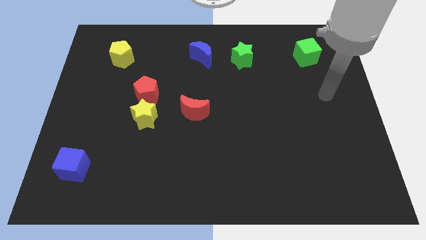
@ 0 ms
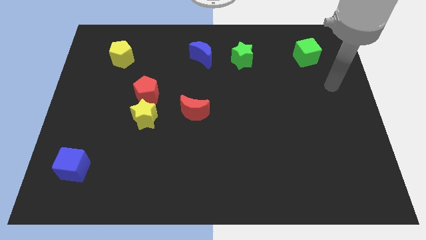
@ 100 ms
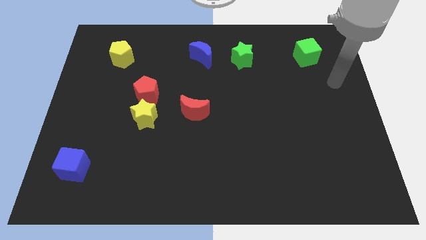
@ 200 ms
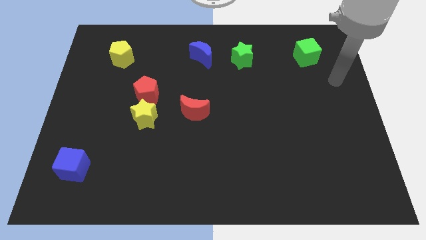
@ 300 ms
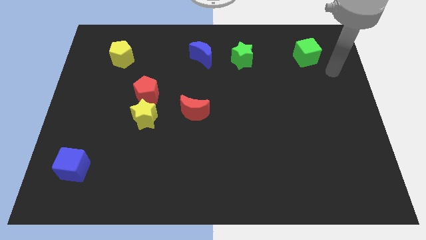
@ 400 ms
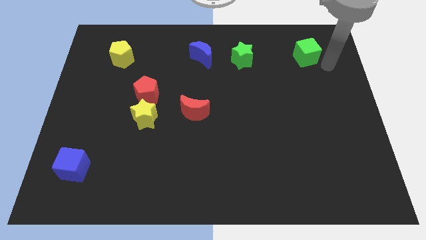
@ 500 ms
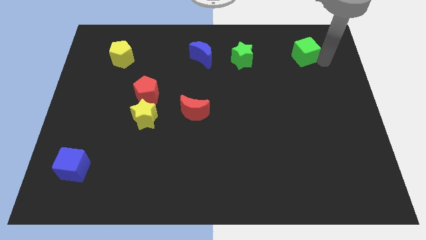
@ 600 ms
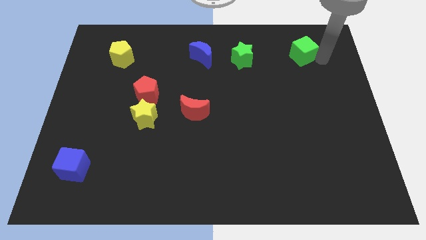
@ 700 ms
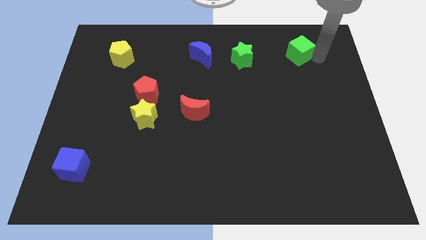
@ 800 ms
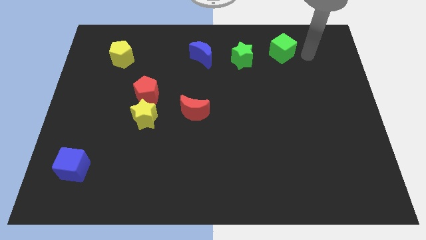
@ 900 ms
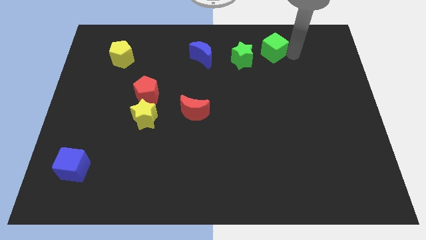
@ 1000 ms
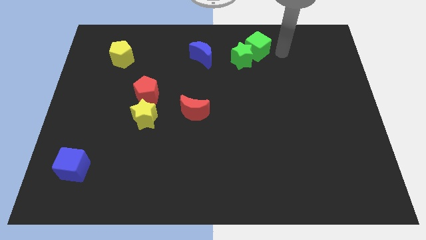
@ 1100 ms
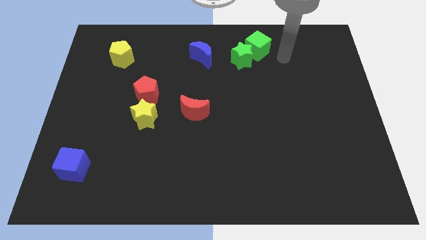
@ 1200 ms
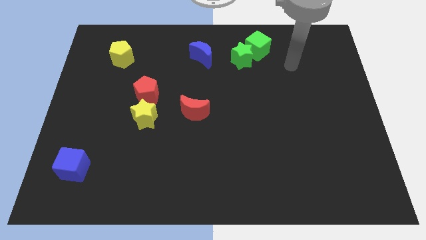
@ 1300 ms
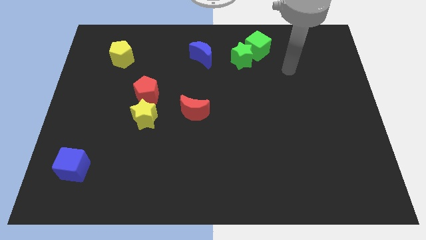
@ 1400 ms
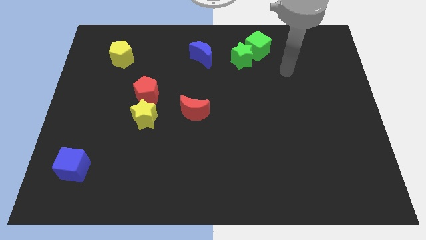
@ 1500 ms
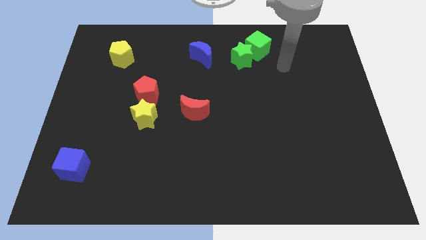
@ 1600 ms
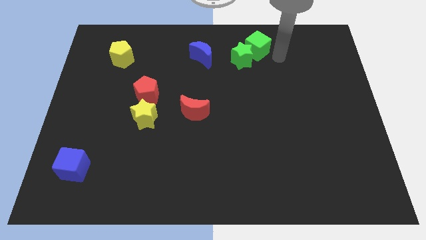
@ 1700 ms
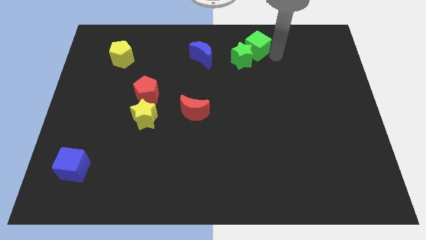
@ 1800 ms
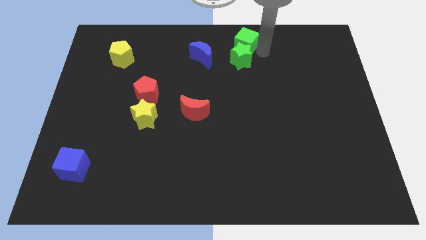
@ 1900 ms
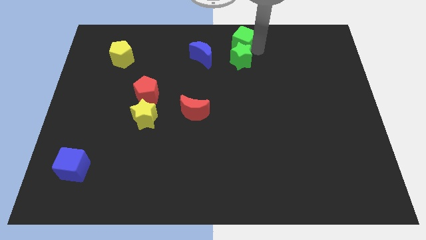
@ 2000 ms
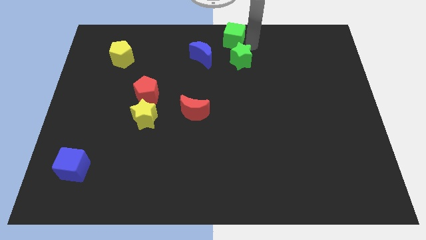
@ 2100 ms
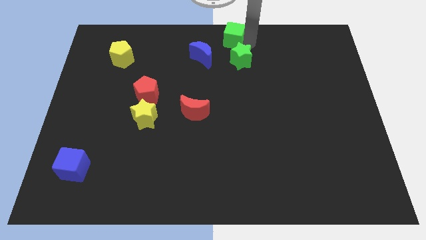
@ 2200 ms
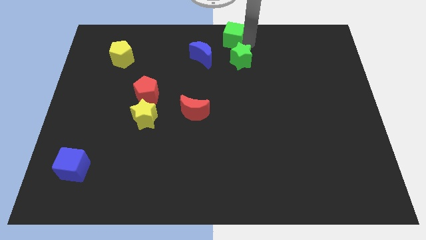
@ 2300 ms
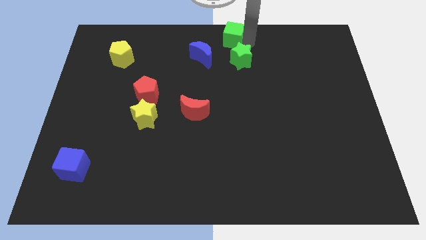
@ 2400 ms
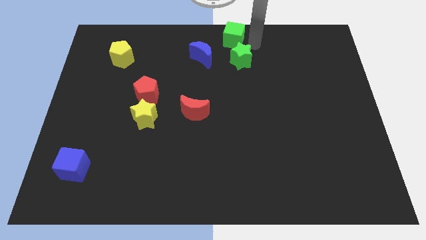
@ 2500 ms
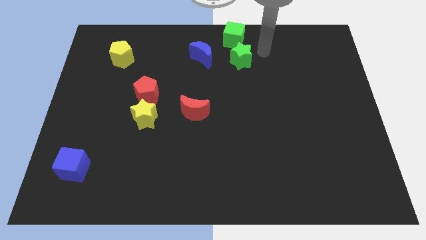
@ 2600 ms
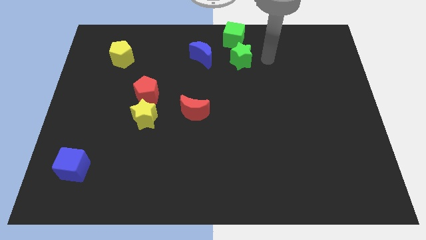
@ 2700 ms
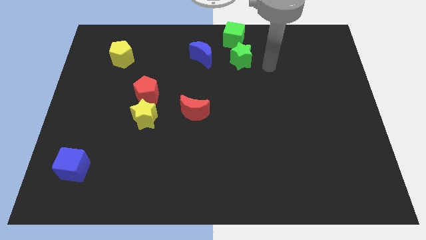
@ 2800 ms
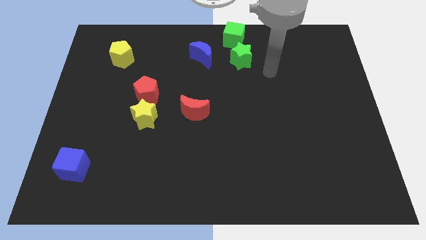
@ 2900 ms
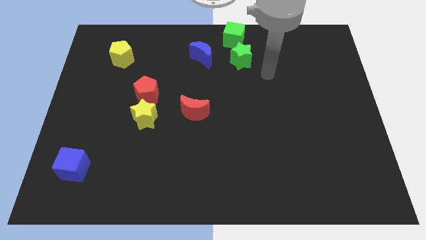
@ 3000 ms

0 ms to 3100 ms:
move the green cube towards the top centre of the board

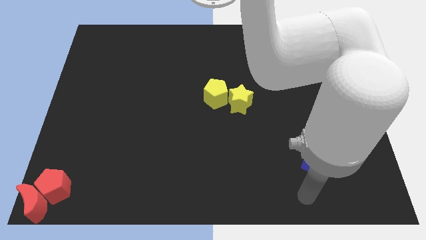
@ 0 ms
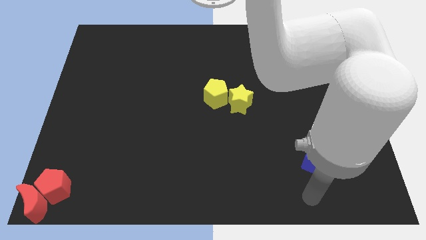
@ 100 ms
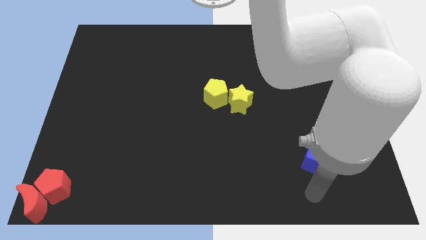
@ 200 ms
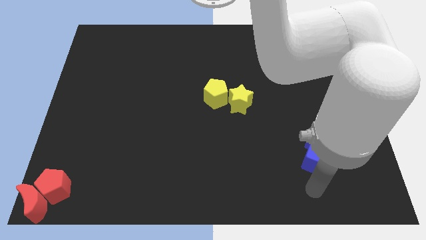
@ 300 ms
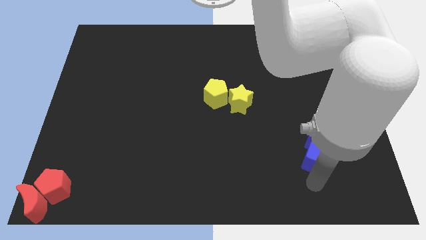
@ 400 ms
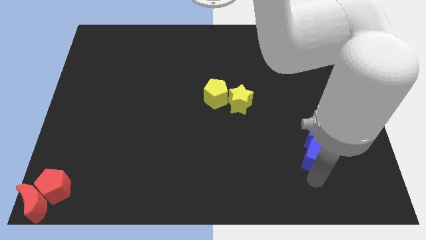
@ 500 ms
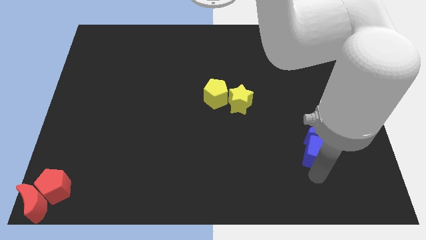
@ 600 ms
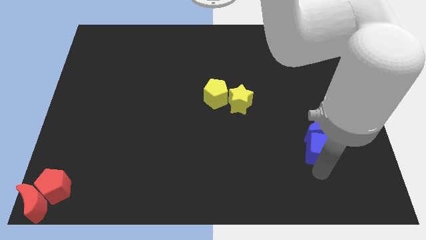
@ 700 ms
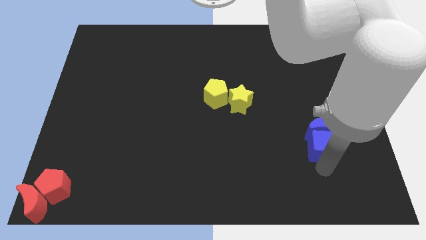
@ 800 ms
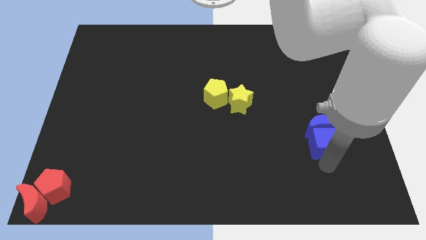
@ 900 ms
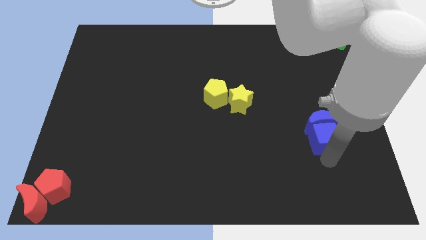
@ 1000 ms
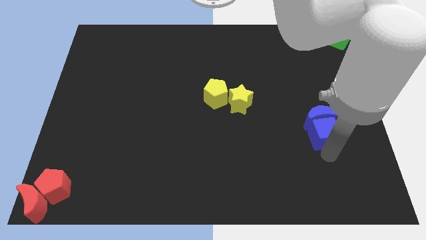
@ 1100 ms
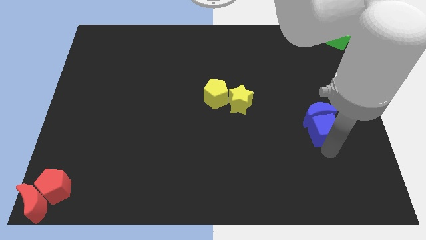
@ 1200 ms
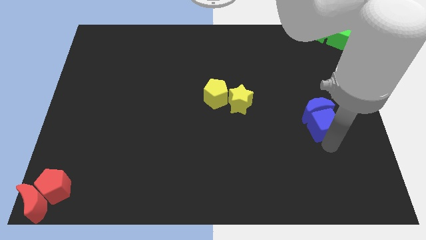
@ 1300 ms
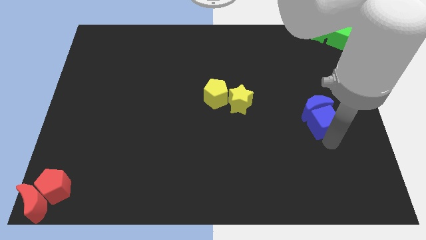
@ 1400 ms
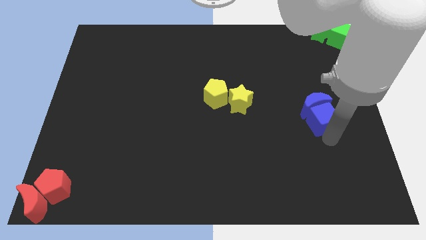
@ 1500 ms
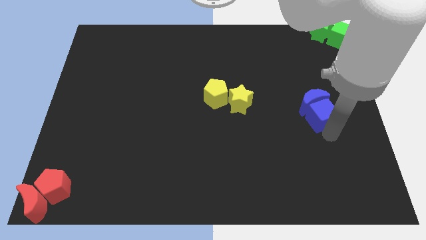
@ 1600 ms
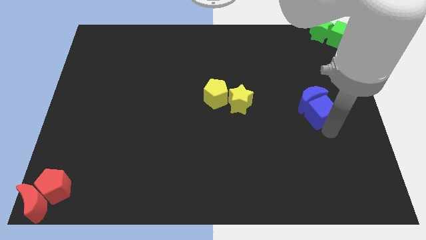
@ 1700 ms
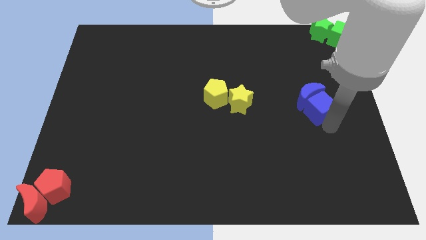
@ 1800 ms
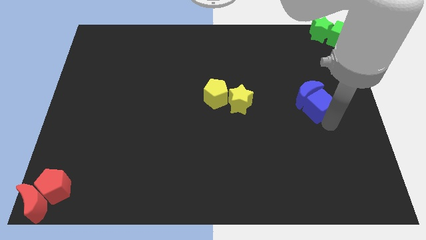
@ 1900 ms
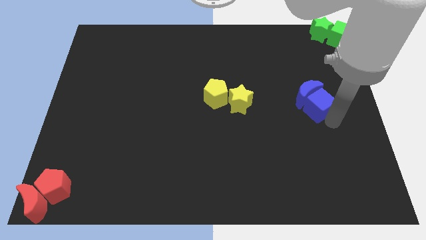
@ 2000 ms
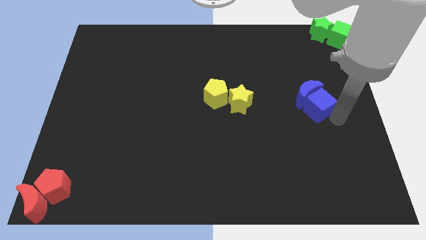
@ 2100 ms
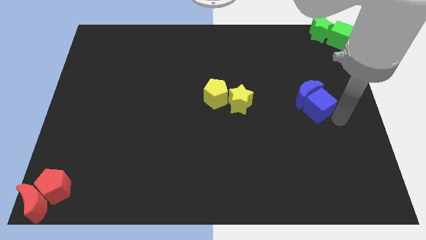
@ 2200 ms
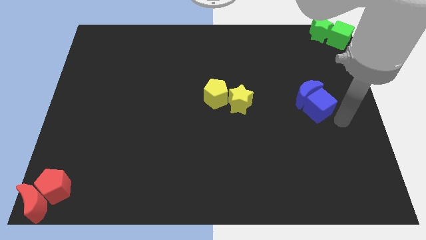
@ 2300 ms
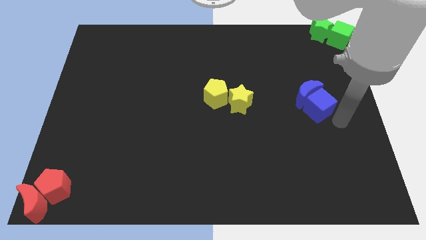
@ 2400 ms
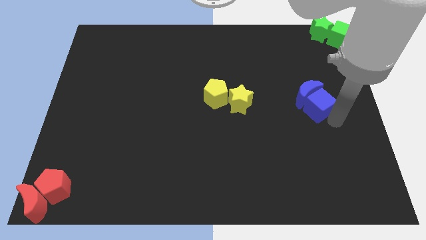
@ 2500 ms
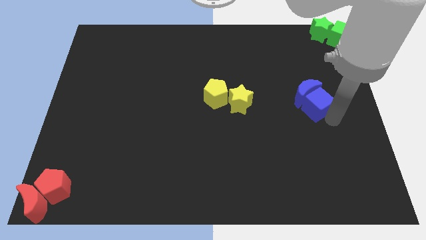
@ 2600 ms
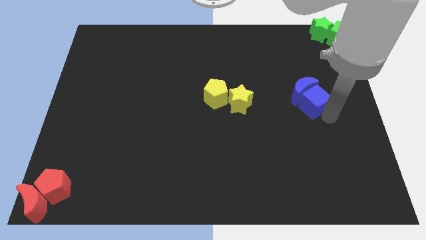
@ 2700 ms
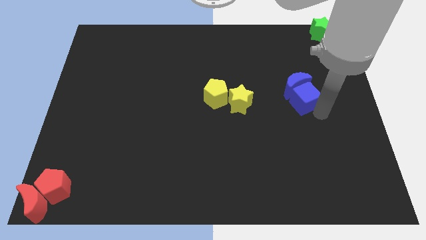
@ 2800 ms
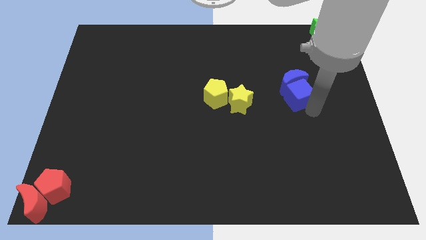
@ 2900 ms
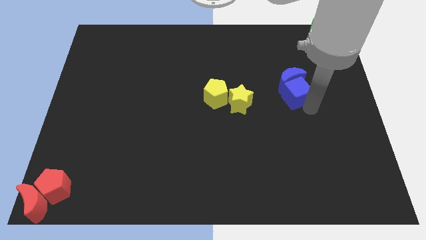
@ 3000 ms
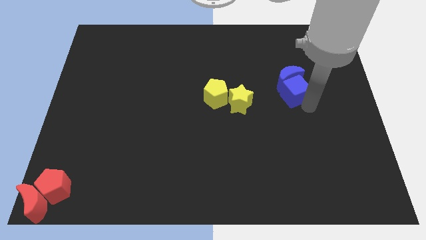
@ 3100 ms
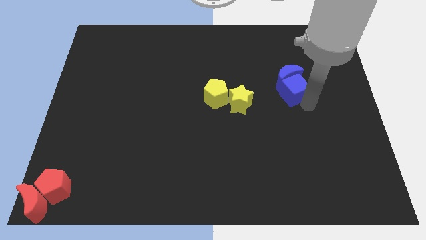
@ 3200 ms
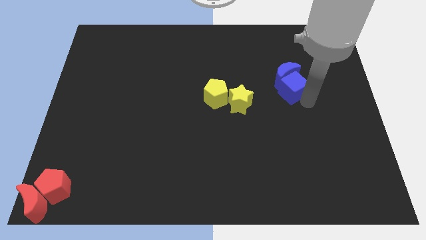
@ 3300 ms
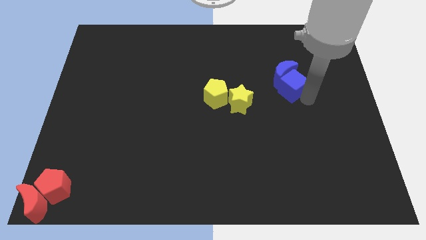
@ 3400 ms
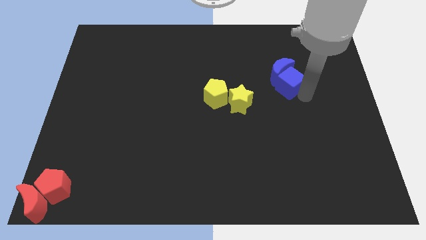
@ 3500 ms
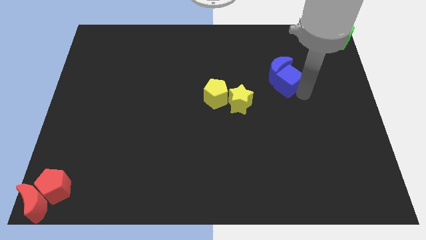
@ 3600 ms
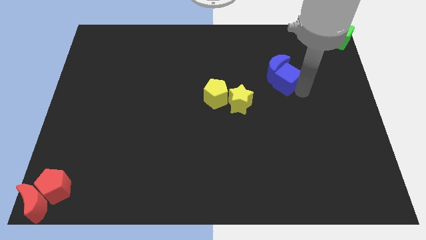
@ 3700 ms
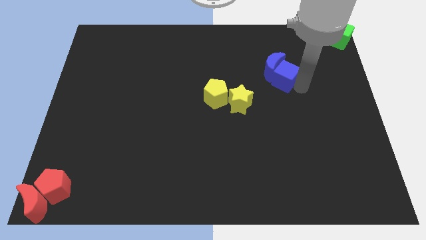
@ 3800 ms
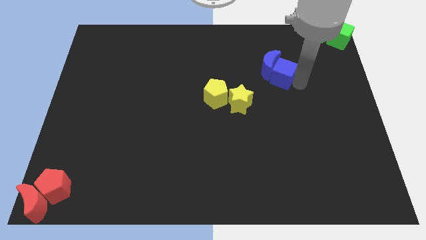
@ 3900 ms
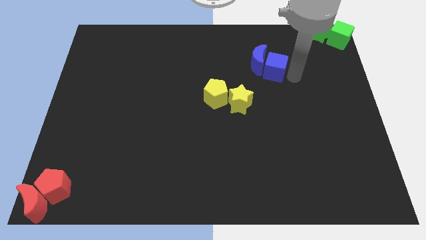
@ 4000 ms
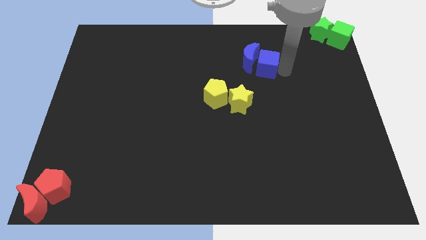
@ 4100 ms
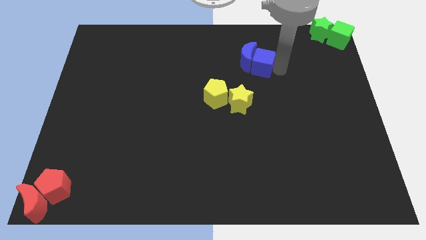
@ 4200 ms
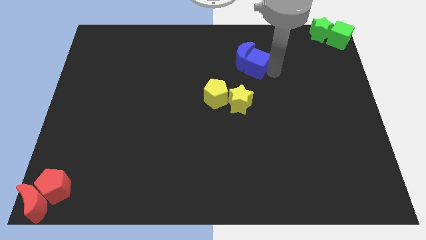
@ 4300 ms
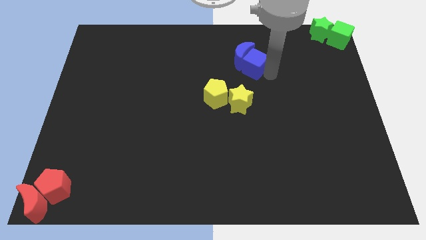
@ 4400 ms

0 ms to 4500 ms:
push the blue cube and blue moon upward

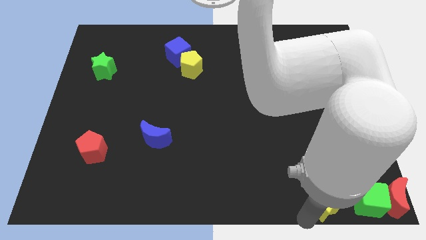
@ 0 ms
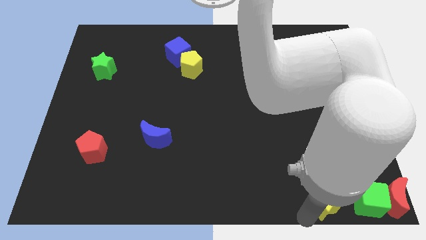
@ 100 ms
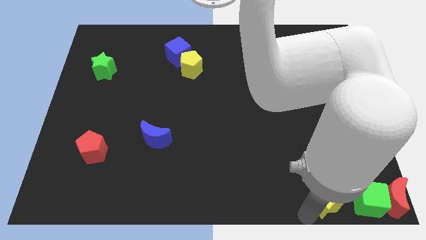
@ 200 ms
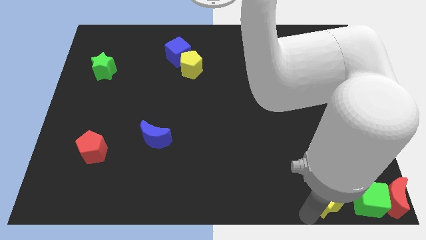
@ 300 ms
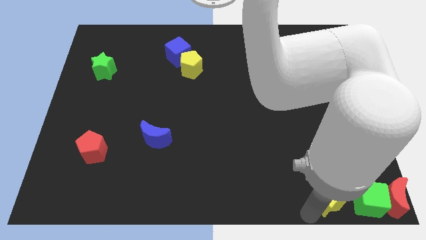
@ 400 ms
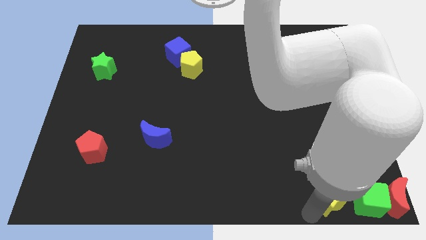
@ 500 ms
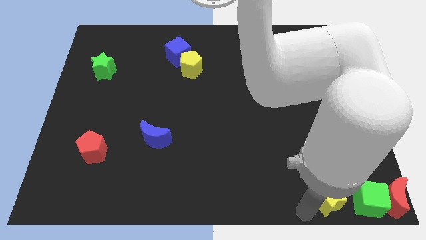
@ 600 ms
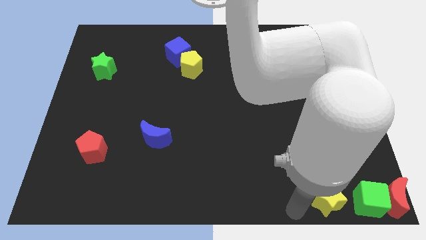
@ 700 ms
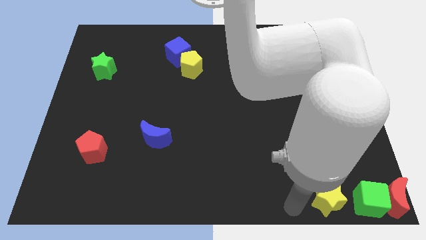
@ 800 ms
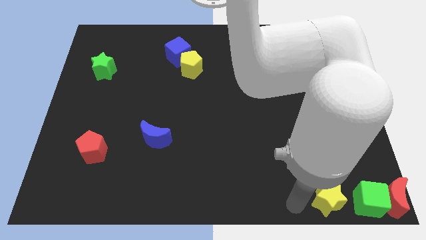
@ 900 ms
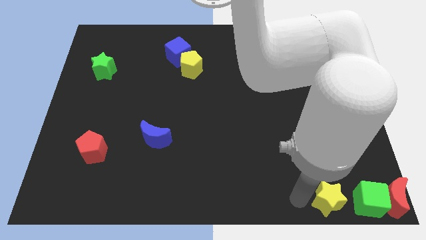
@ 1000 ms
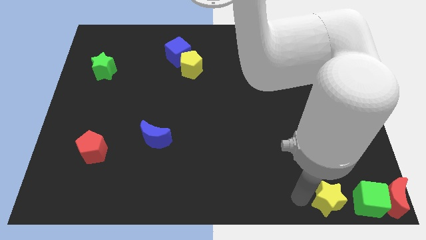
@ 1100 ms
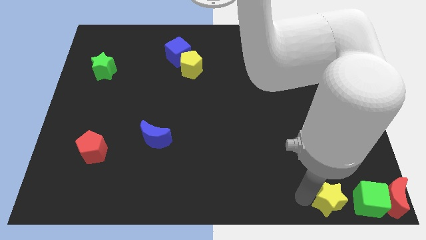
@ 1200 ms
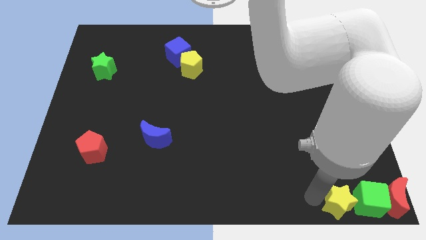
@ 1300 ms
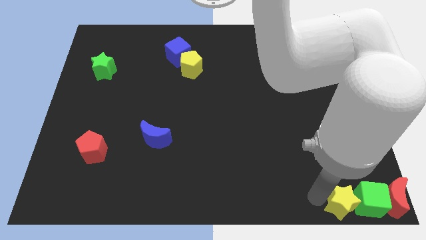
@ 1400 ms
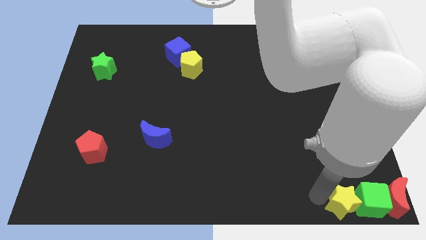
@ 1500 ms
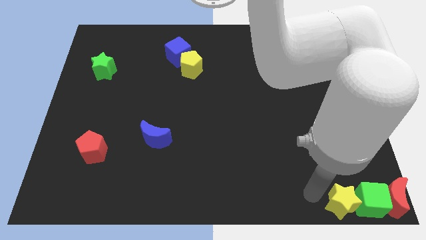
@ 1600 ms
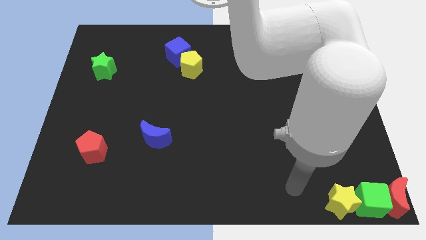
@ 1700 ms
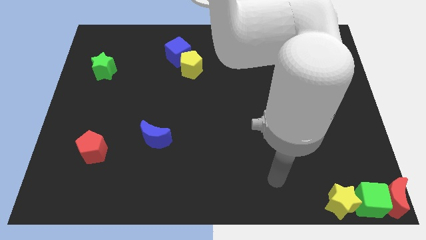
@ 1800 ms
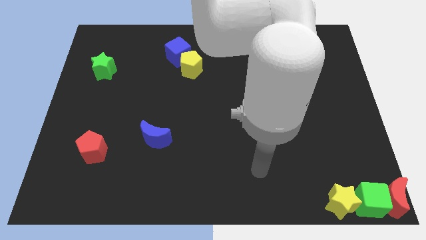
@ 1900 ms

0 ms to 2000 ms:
push the yellow star into the green cube
